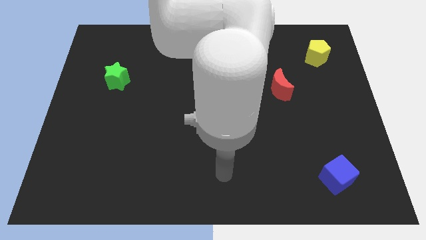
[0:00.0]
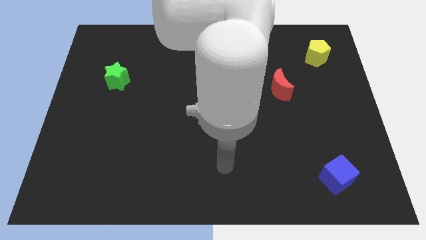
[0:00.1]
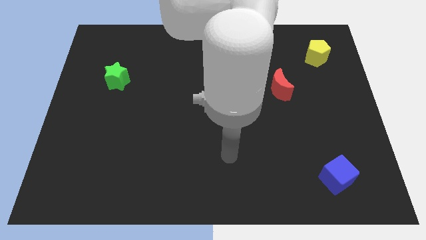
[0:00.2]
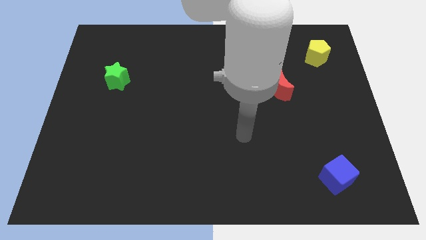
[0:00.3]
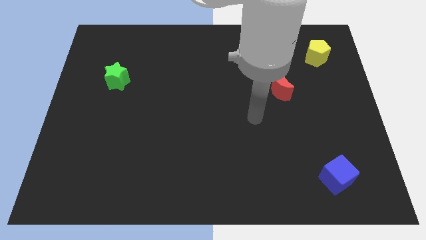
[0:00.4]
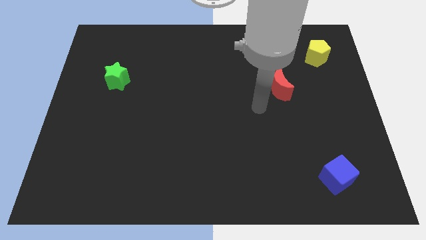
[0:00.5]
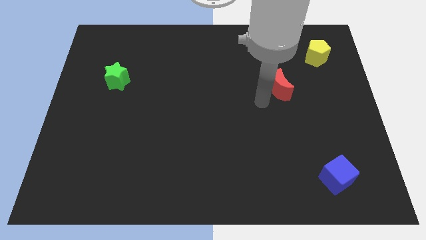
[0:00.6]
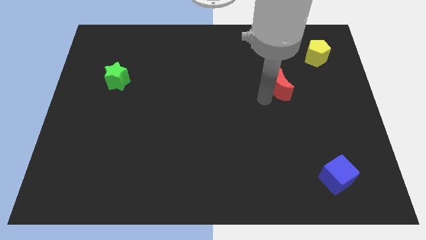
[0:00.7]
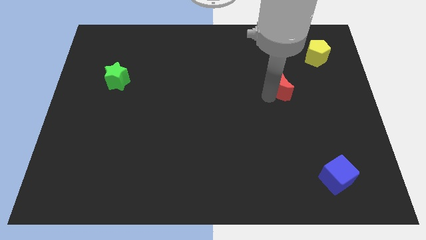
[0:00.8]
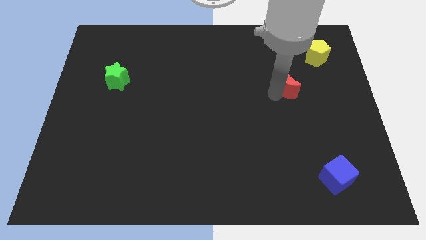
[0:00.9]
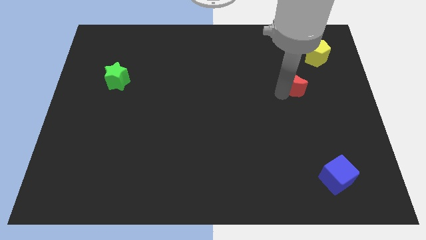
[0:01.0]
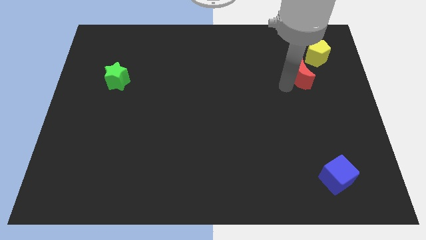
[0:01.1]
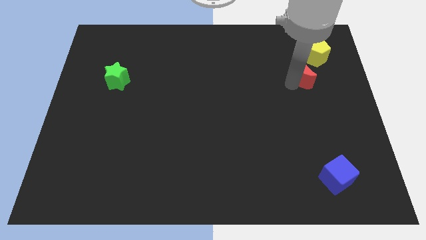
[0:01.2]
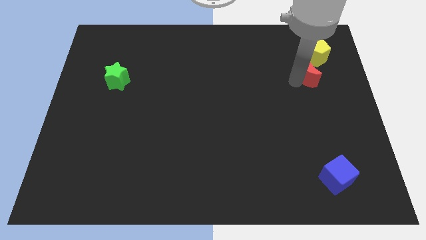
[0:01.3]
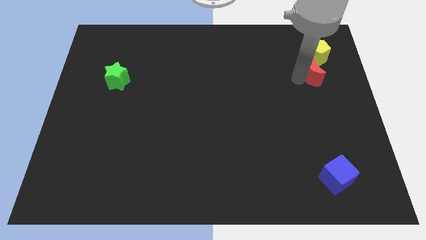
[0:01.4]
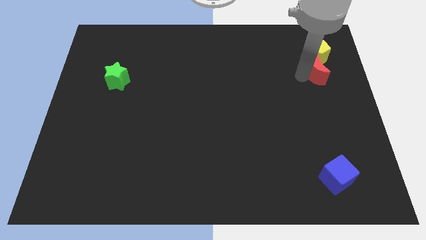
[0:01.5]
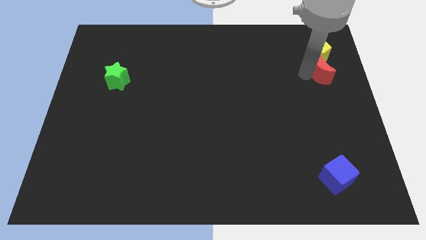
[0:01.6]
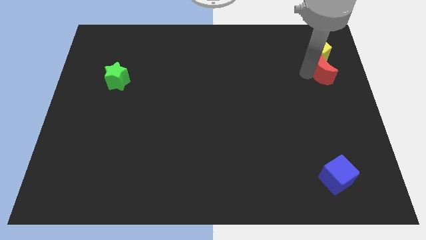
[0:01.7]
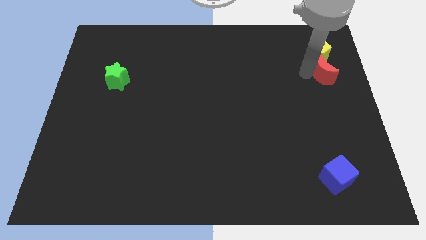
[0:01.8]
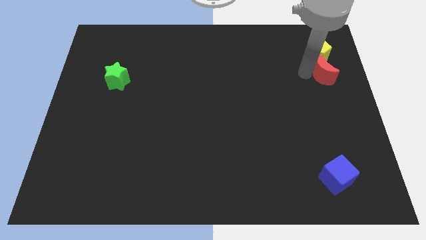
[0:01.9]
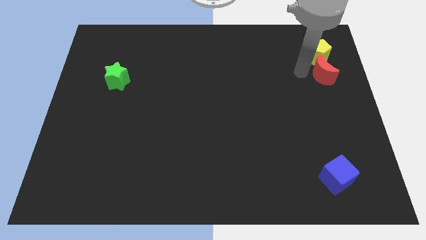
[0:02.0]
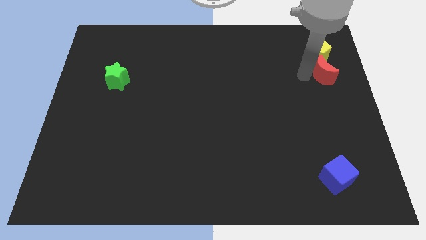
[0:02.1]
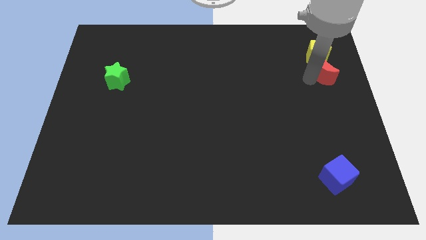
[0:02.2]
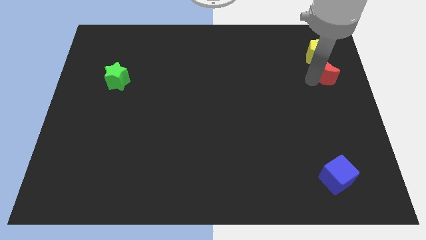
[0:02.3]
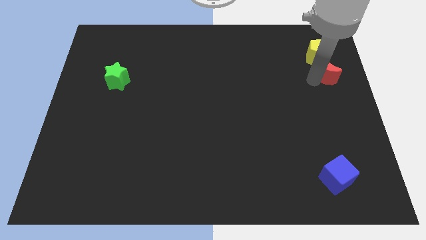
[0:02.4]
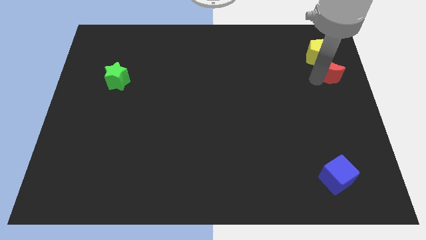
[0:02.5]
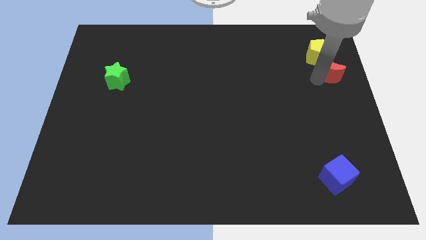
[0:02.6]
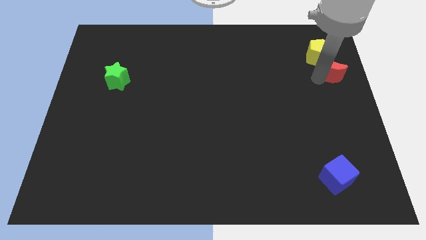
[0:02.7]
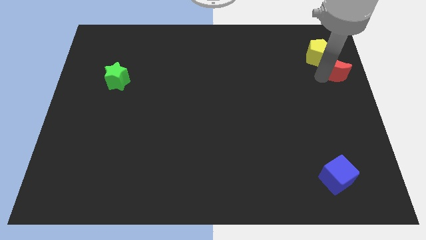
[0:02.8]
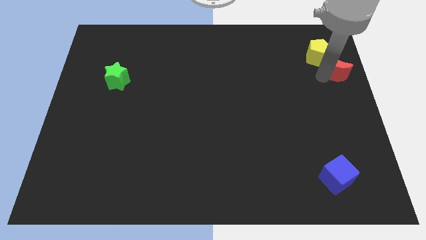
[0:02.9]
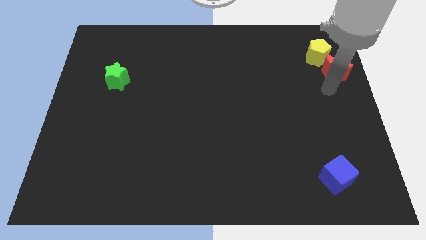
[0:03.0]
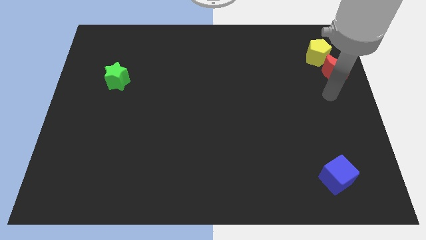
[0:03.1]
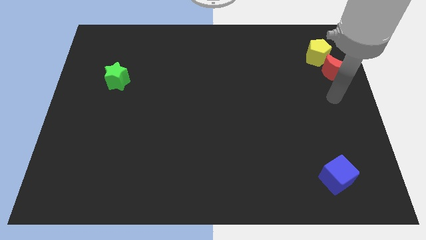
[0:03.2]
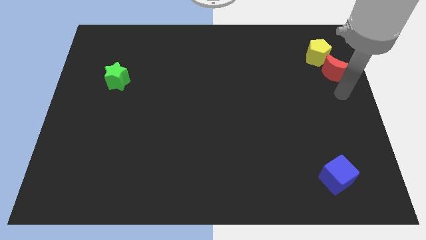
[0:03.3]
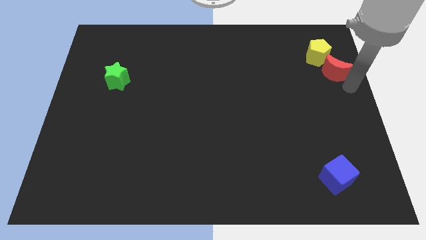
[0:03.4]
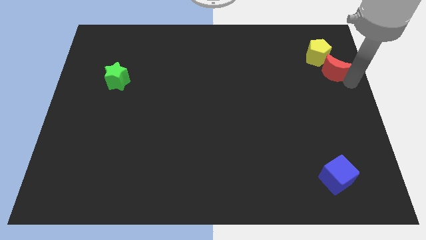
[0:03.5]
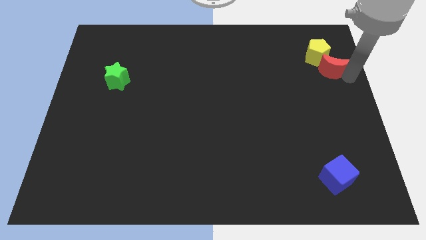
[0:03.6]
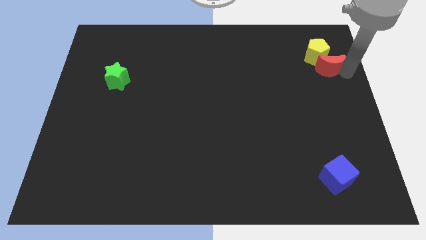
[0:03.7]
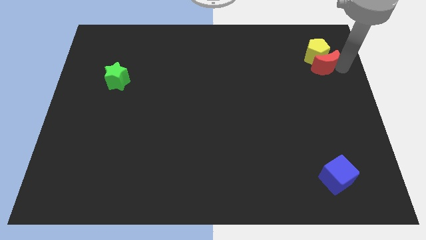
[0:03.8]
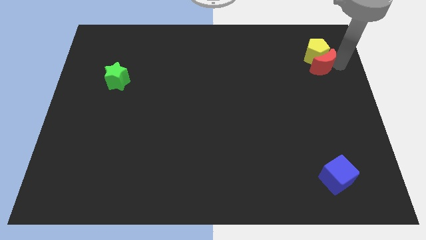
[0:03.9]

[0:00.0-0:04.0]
slide the red block to the yellow block

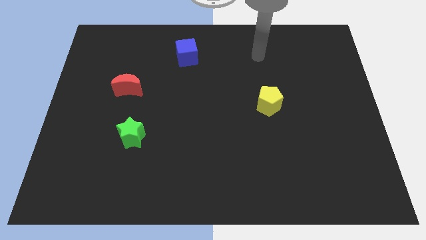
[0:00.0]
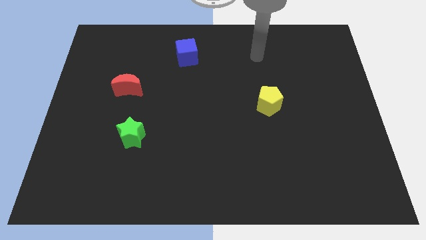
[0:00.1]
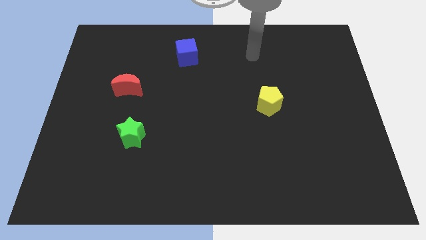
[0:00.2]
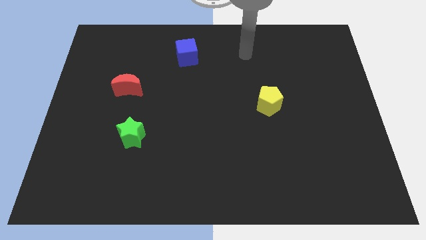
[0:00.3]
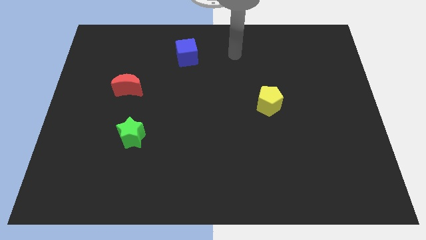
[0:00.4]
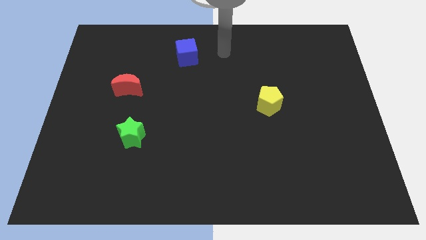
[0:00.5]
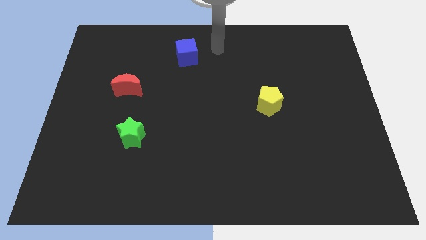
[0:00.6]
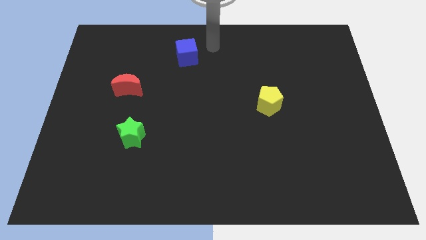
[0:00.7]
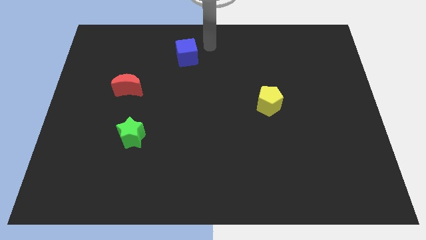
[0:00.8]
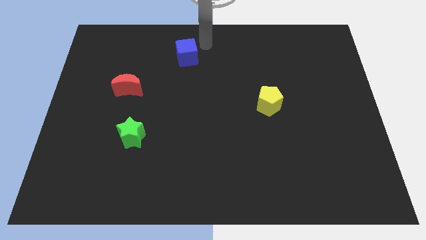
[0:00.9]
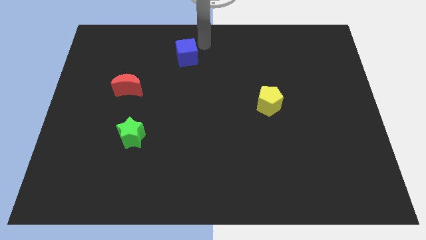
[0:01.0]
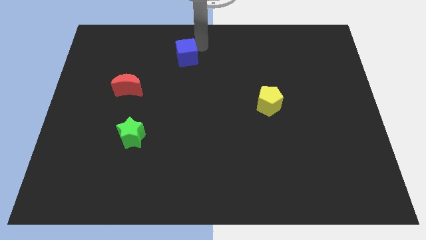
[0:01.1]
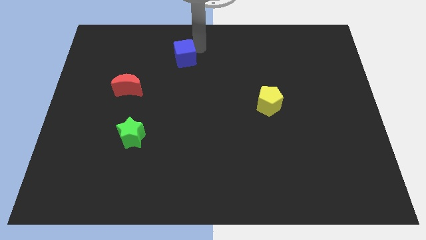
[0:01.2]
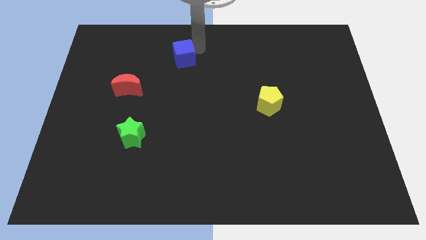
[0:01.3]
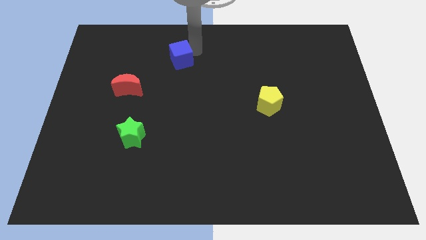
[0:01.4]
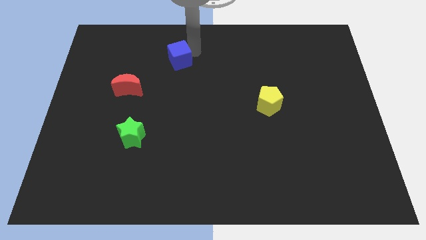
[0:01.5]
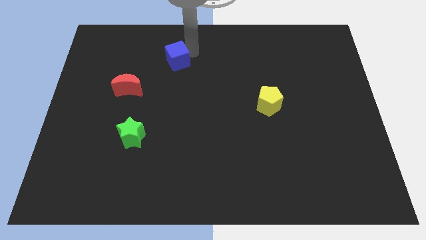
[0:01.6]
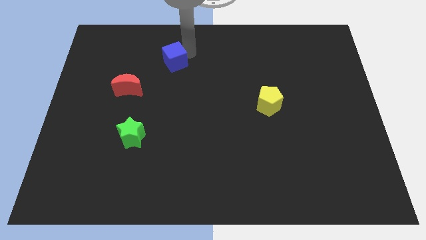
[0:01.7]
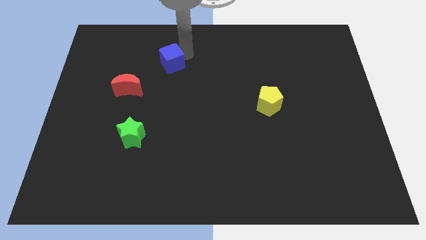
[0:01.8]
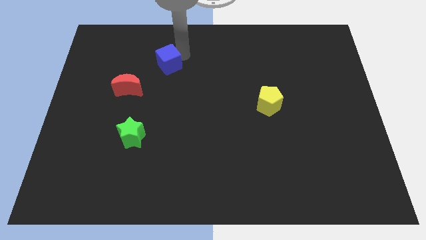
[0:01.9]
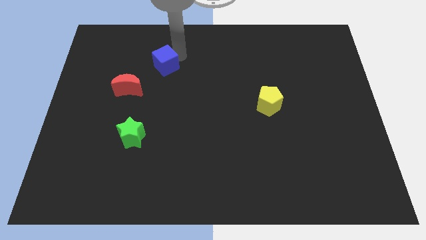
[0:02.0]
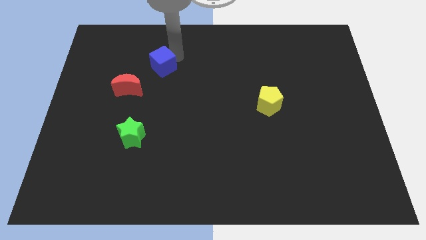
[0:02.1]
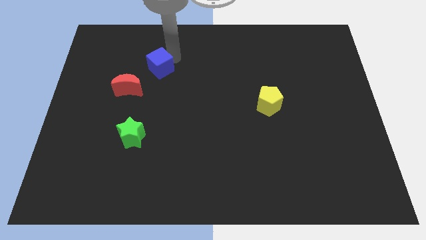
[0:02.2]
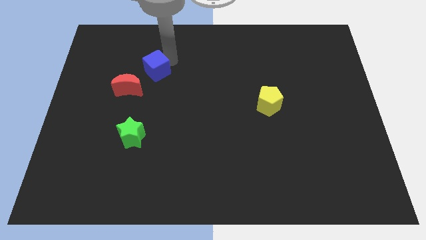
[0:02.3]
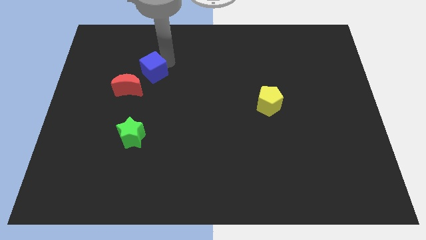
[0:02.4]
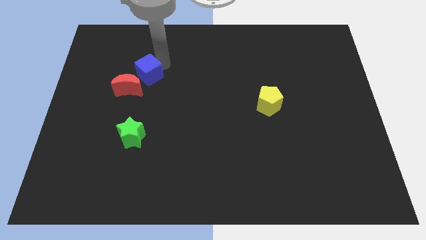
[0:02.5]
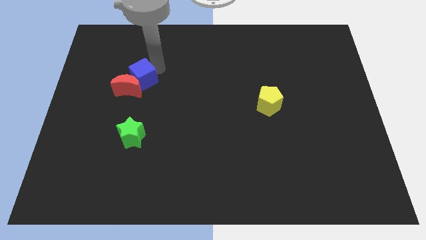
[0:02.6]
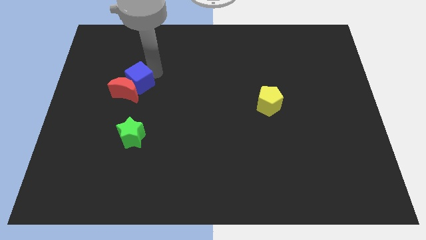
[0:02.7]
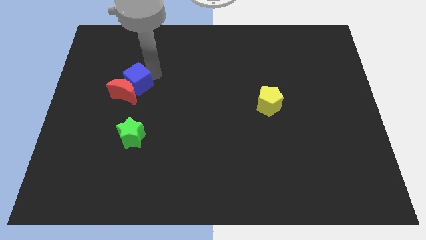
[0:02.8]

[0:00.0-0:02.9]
put the cube close to the moon

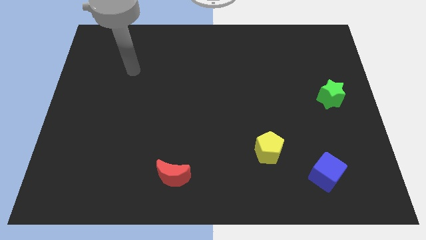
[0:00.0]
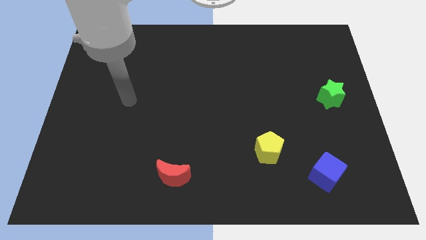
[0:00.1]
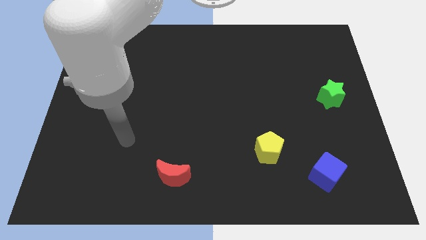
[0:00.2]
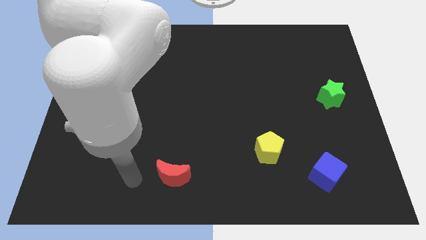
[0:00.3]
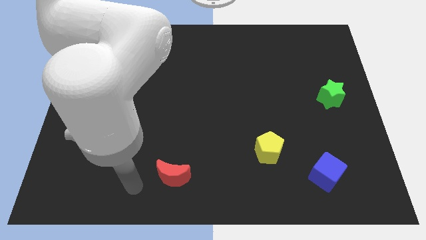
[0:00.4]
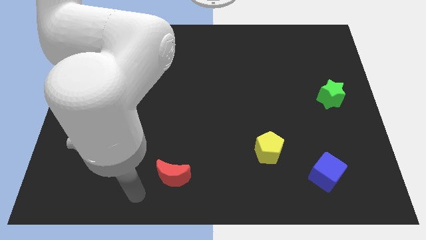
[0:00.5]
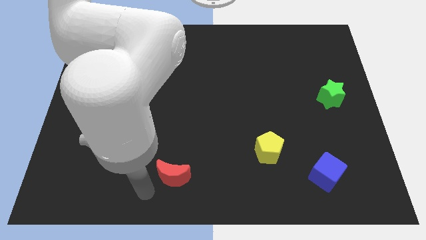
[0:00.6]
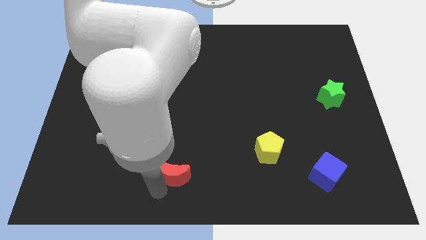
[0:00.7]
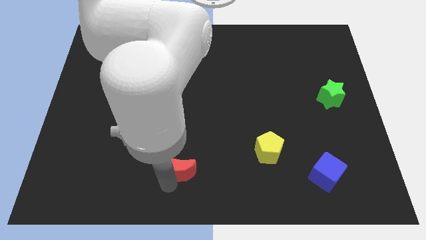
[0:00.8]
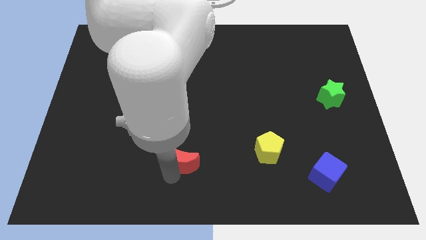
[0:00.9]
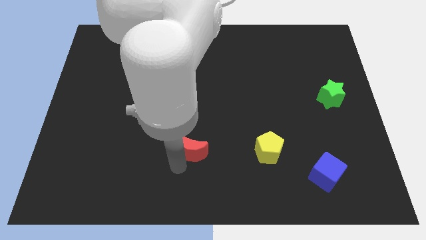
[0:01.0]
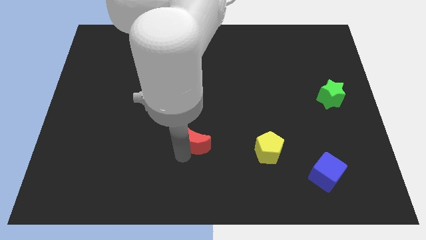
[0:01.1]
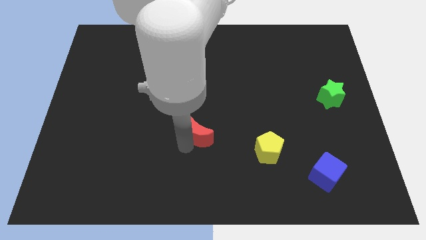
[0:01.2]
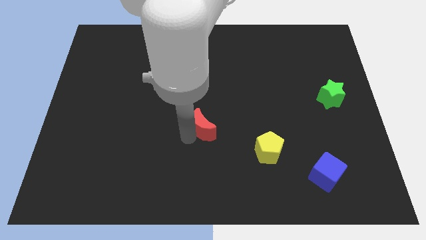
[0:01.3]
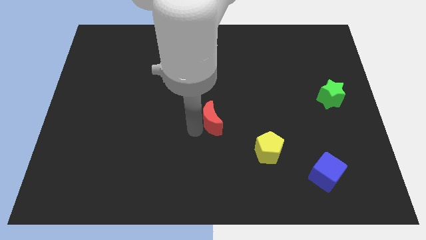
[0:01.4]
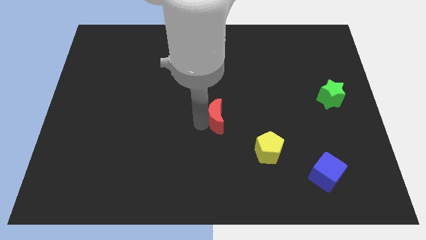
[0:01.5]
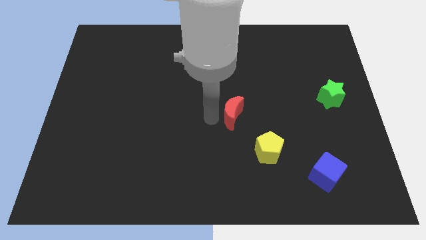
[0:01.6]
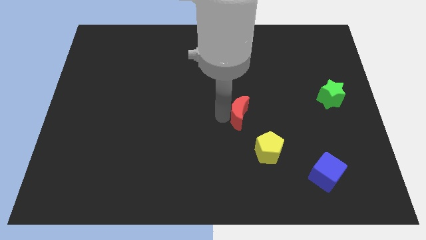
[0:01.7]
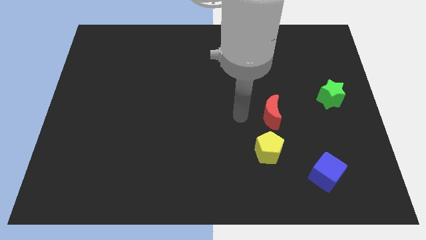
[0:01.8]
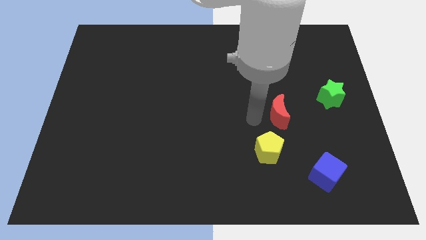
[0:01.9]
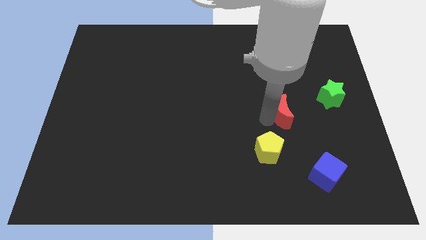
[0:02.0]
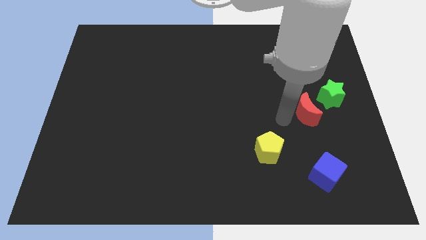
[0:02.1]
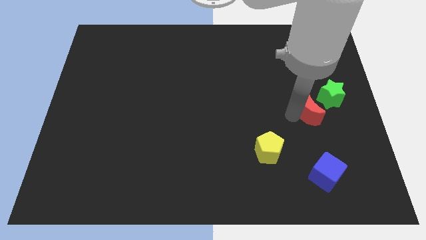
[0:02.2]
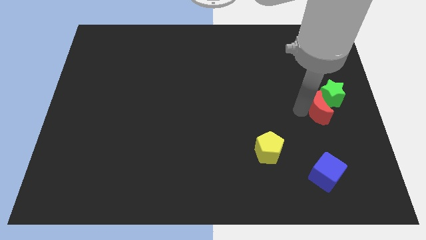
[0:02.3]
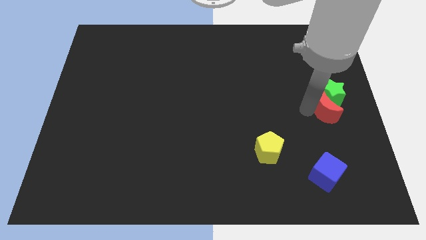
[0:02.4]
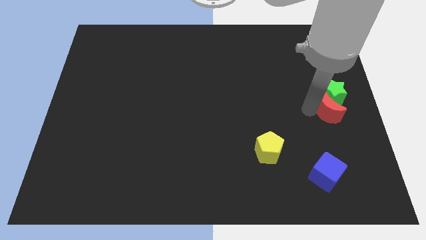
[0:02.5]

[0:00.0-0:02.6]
slide the red moon close to the star
